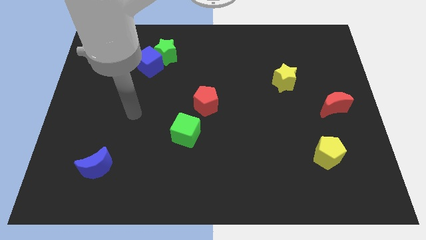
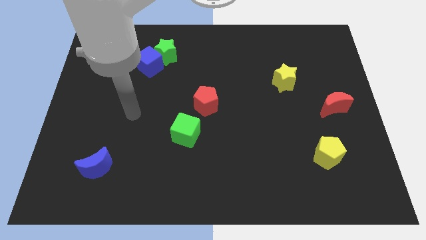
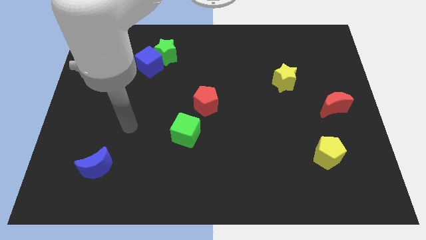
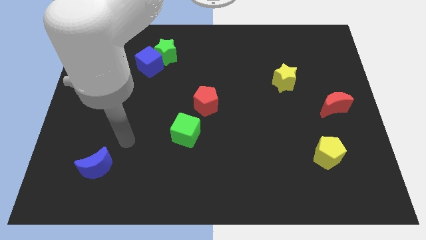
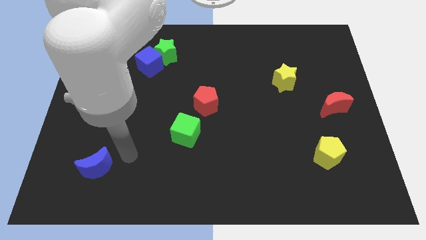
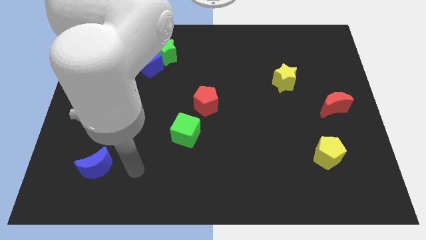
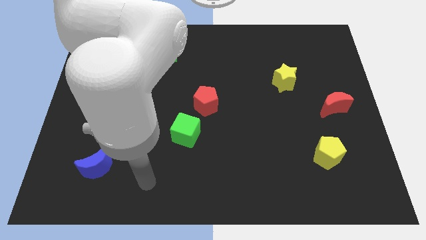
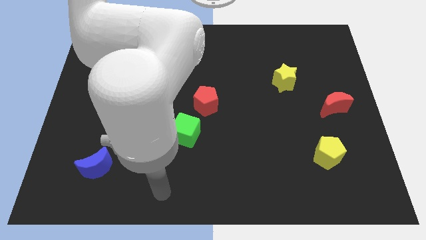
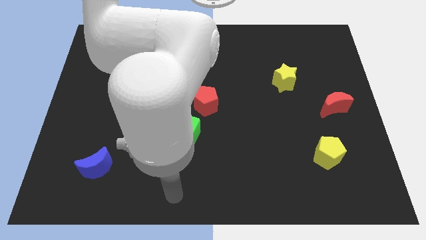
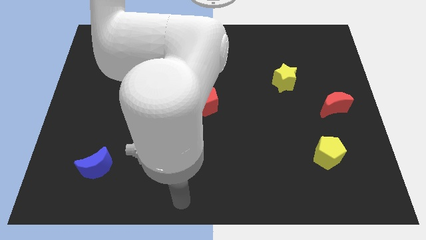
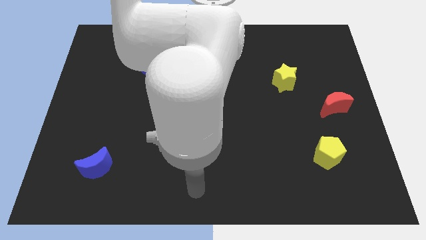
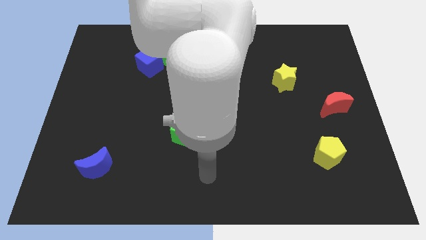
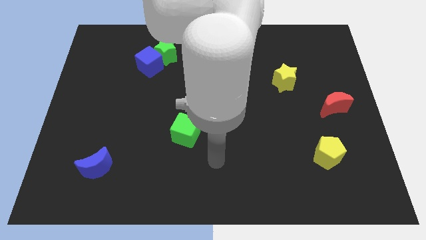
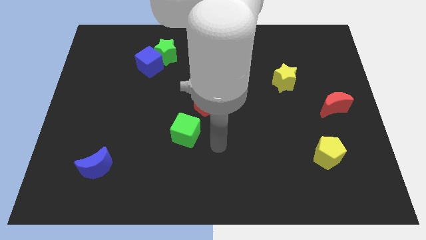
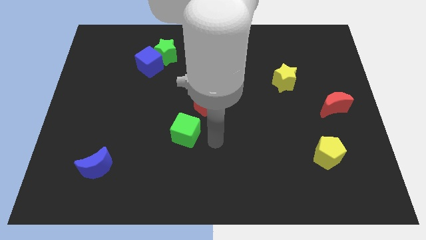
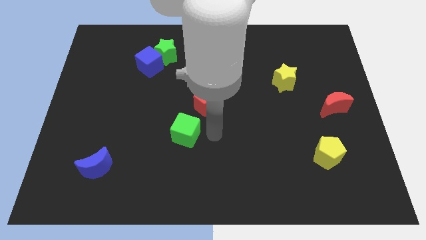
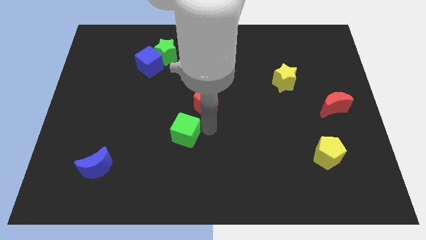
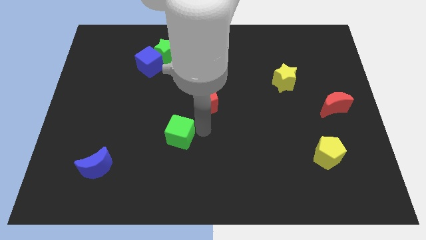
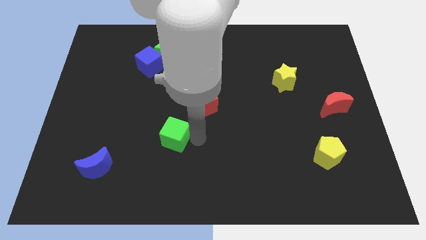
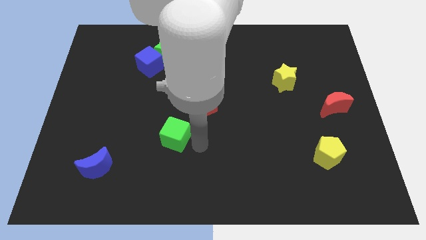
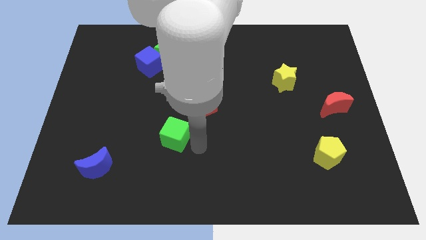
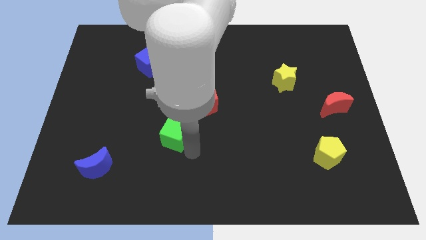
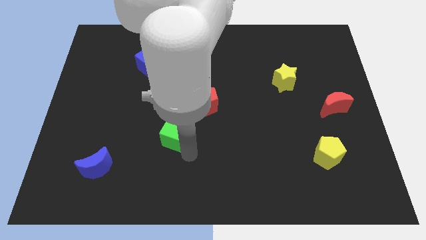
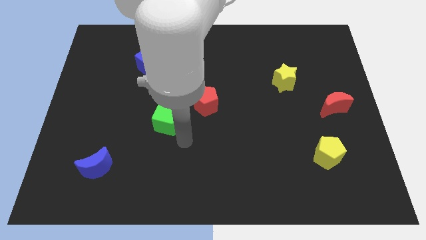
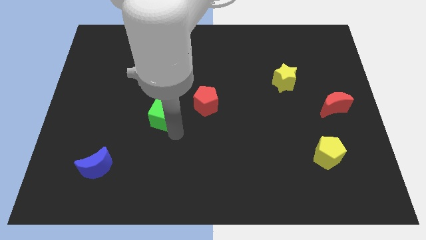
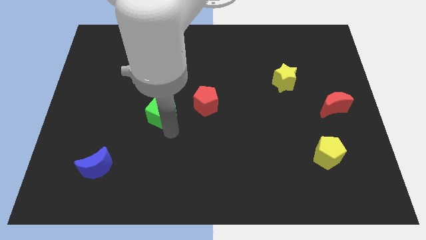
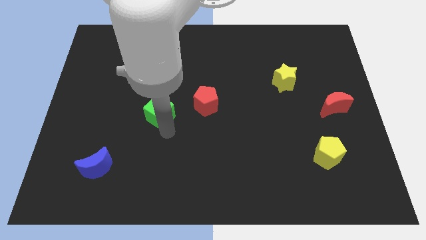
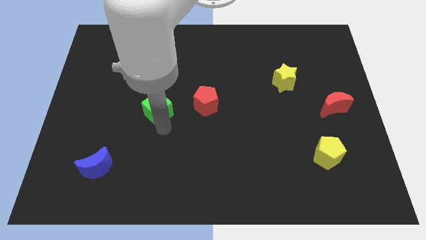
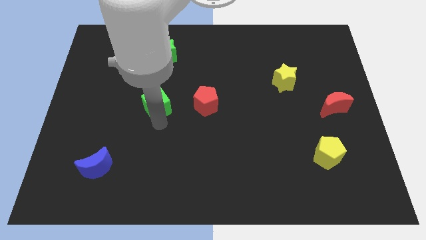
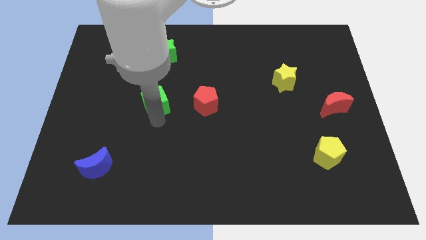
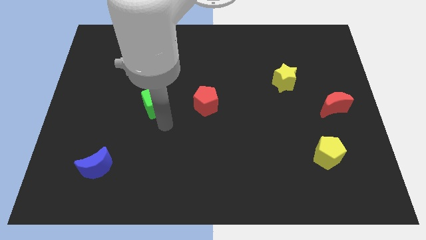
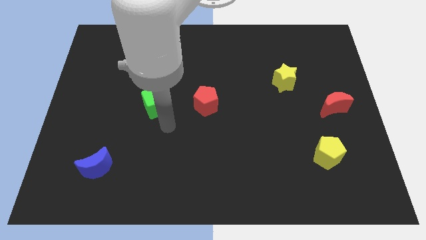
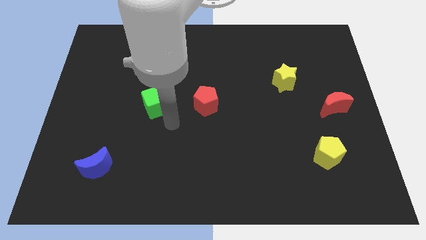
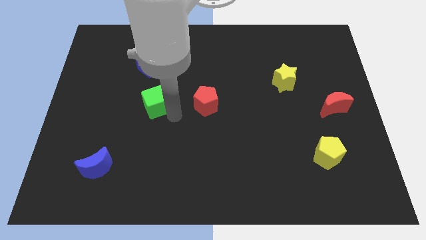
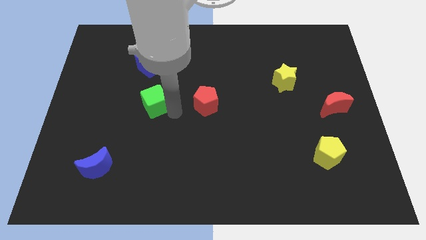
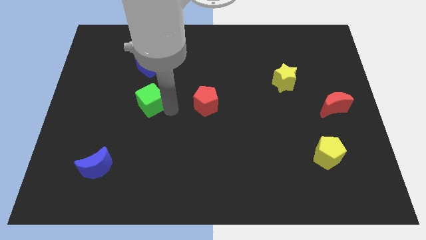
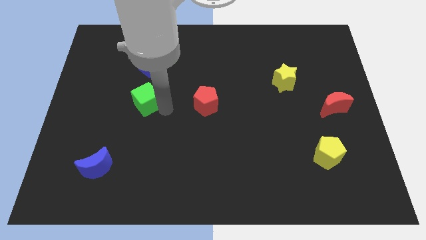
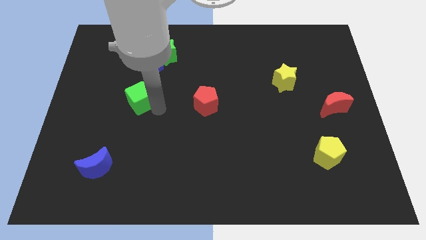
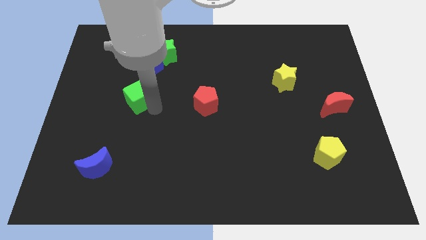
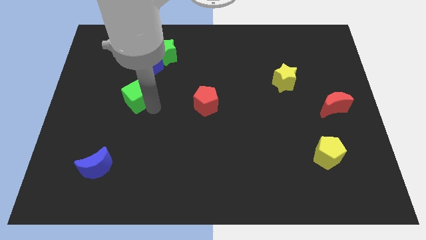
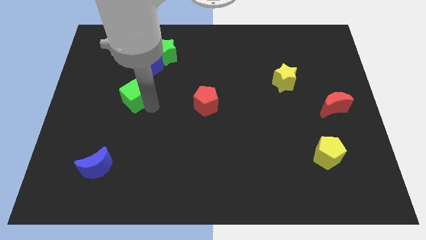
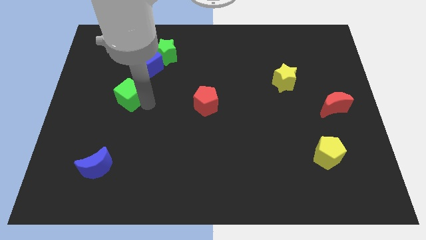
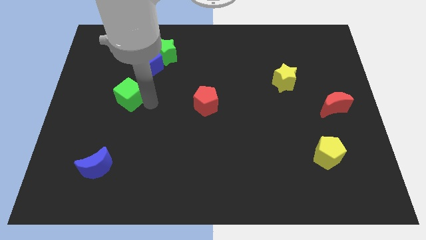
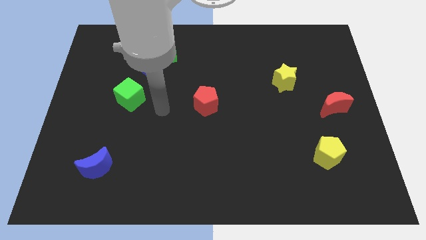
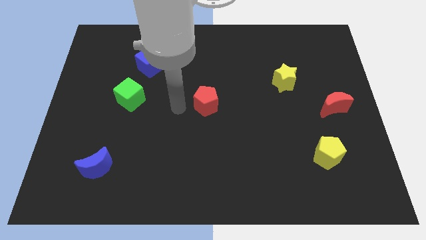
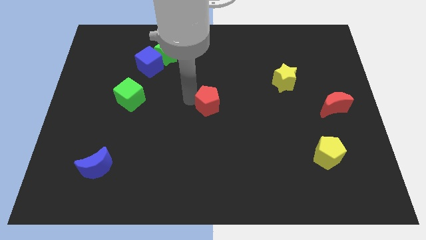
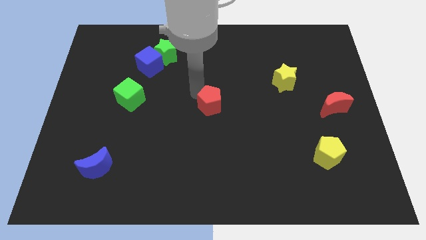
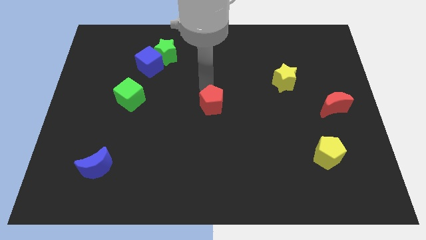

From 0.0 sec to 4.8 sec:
place the green cube in between blue cube and crescent

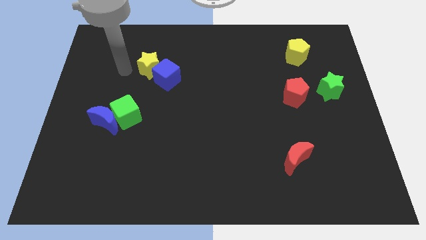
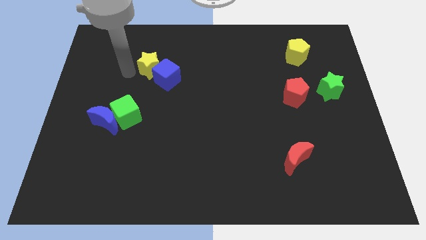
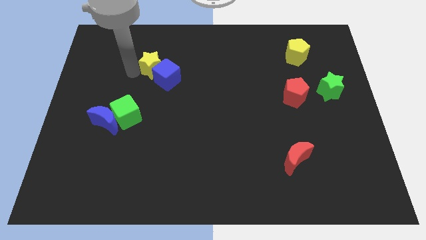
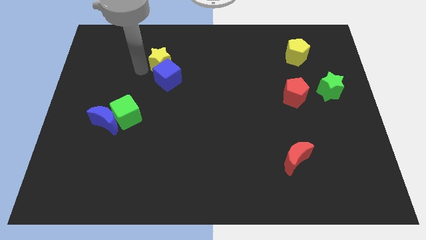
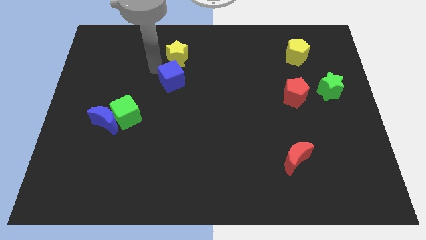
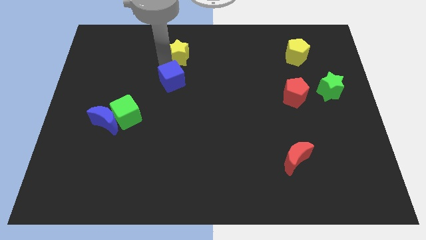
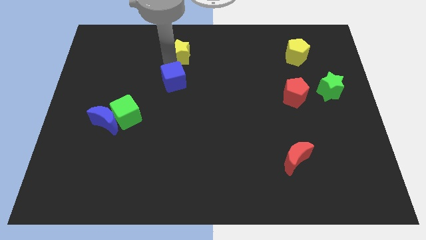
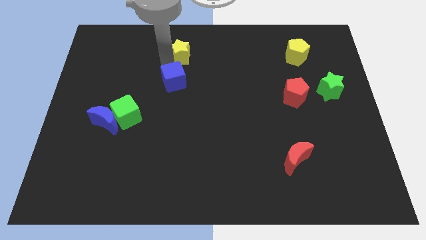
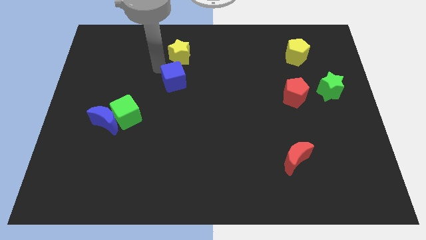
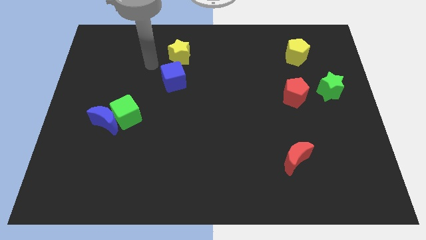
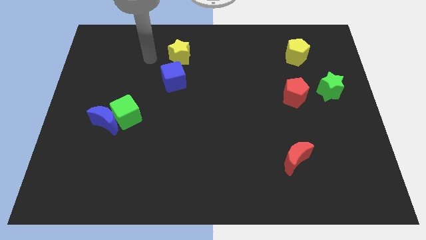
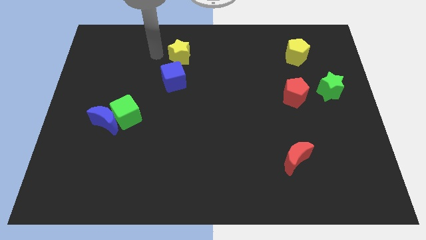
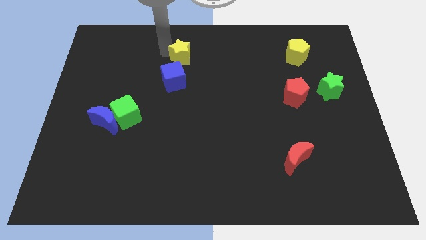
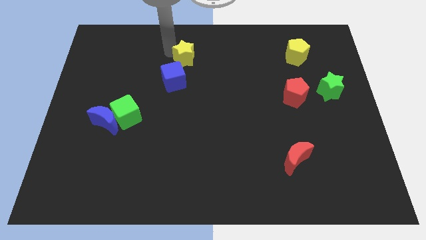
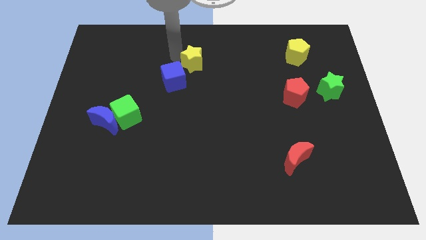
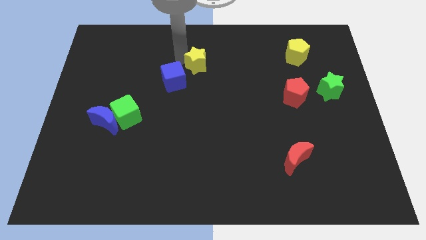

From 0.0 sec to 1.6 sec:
separate yellow star and blue cube

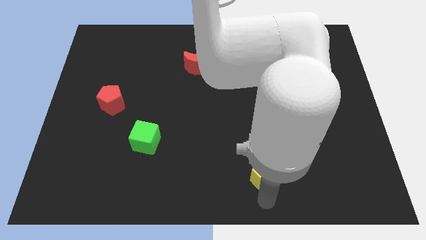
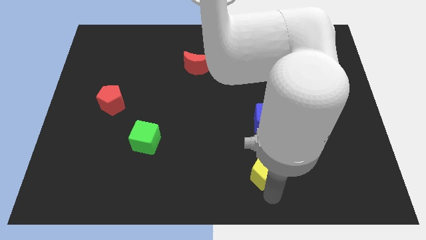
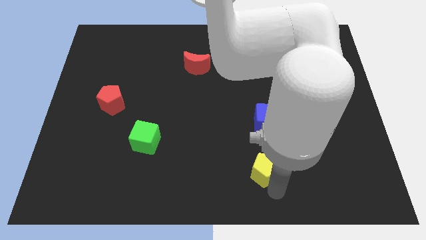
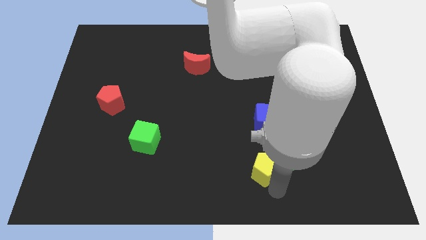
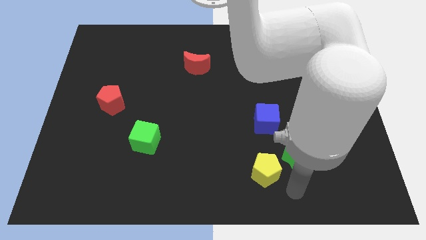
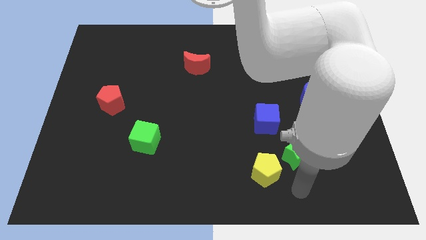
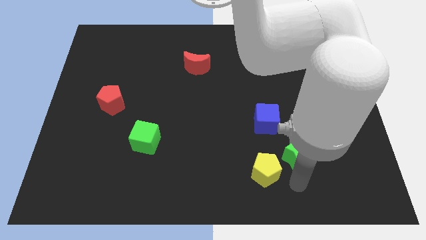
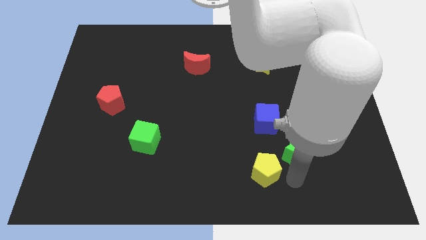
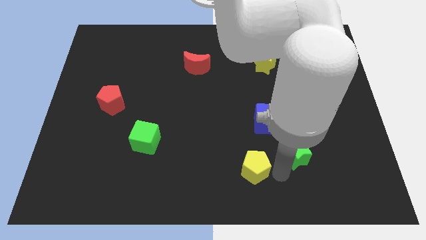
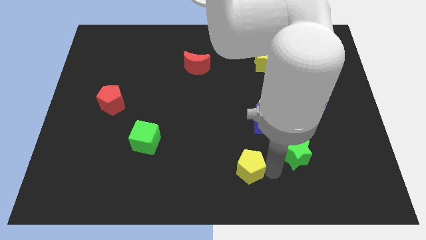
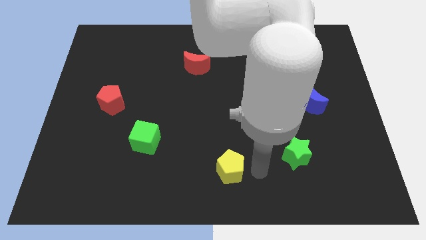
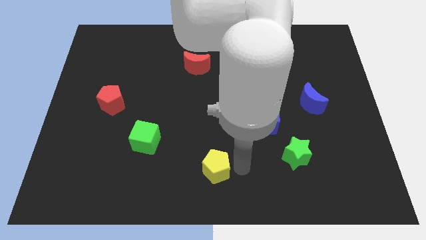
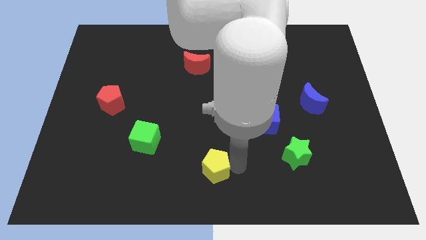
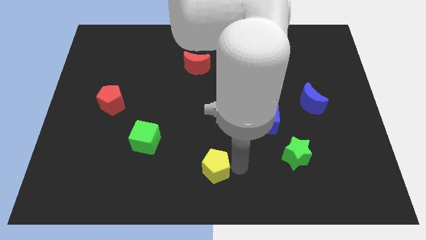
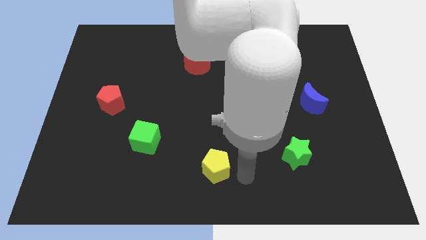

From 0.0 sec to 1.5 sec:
place the yellow pentagon to the bottom center of the board

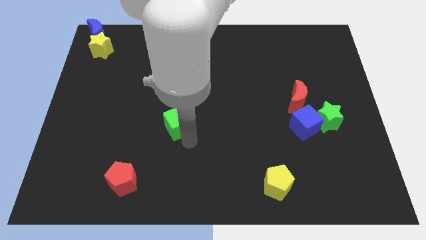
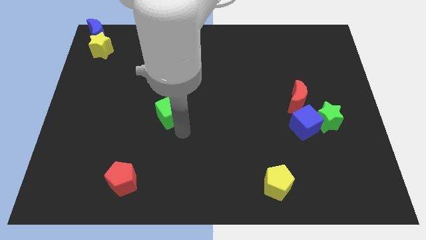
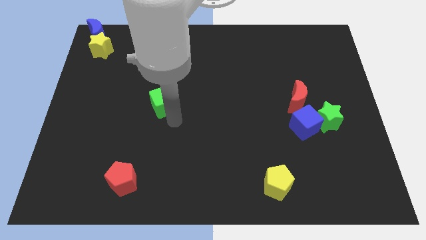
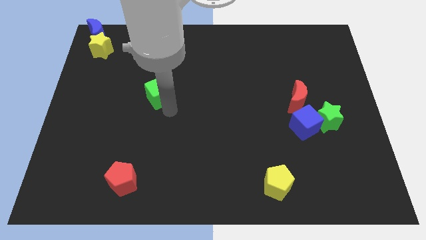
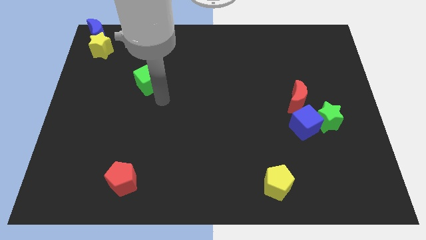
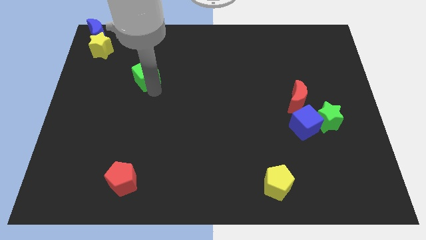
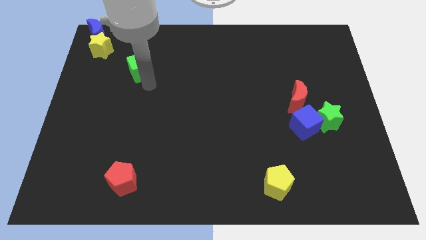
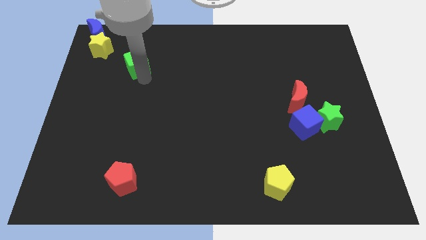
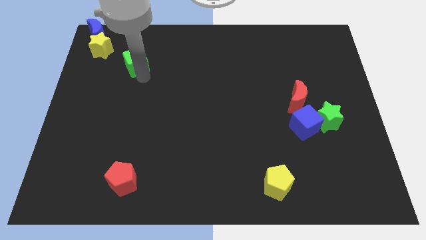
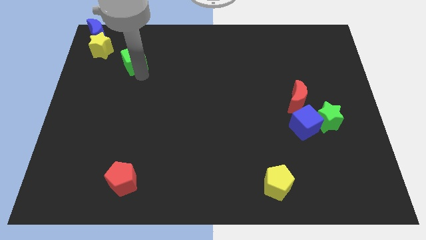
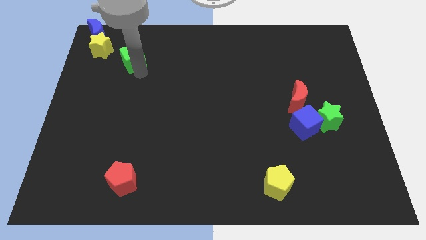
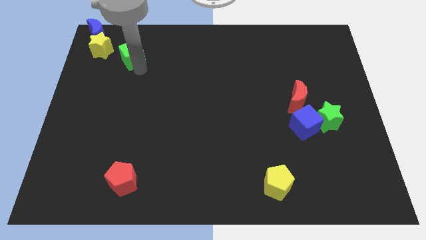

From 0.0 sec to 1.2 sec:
move the green cube towards the top left corner of the board
